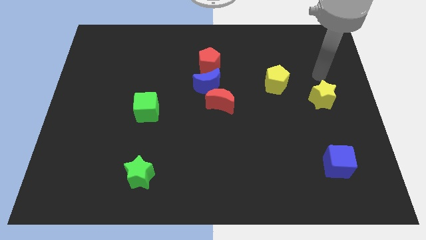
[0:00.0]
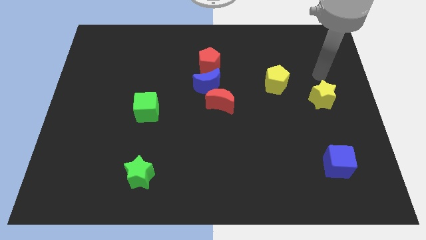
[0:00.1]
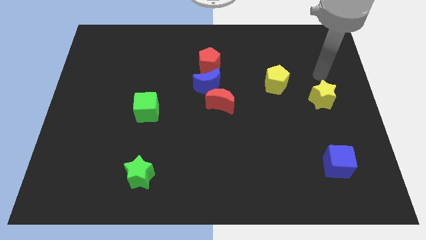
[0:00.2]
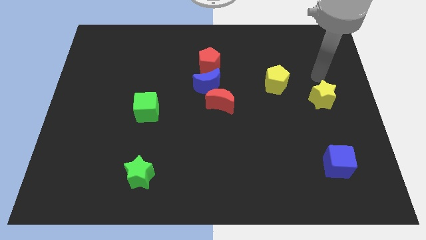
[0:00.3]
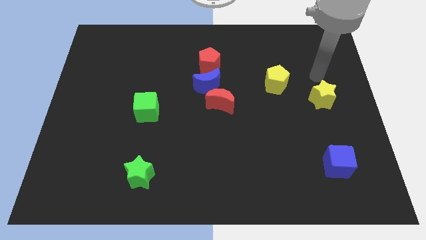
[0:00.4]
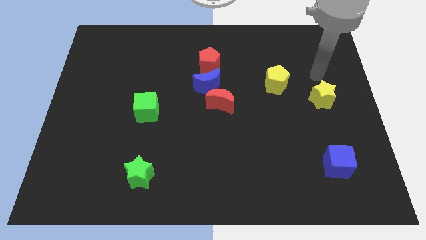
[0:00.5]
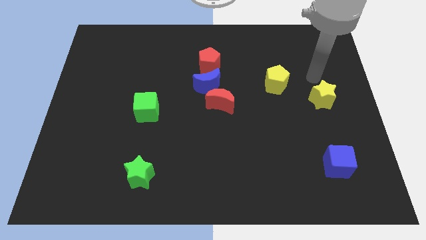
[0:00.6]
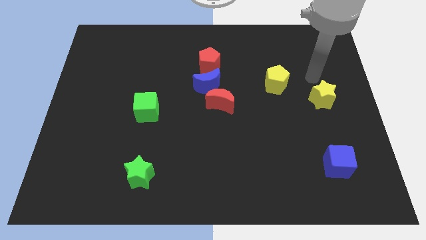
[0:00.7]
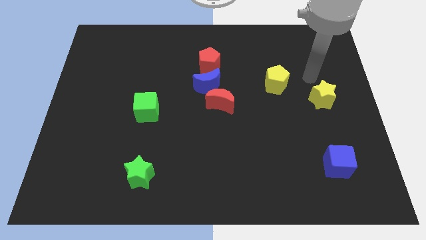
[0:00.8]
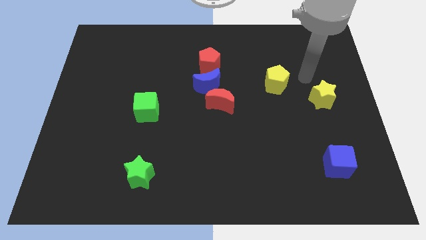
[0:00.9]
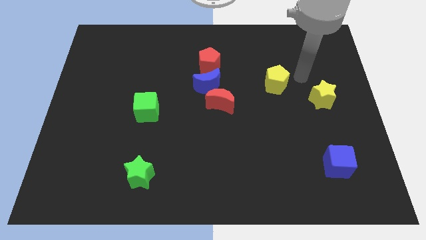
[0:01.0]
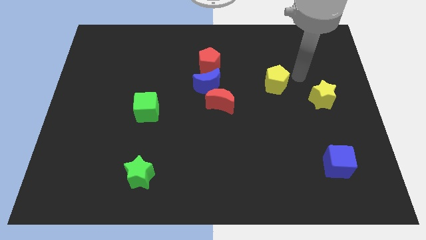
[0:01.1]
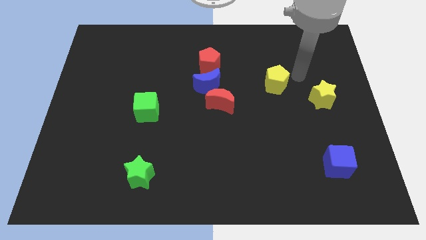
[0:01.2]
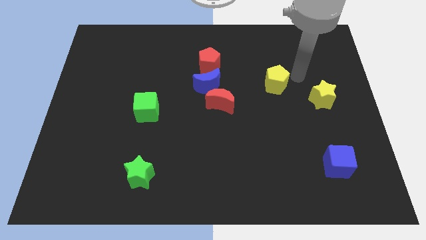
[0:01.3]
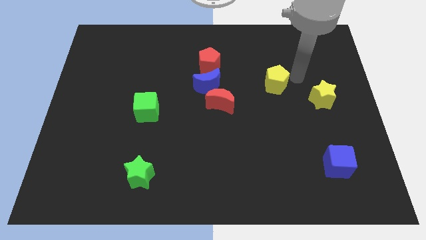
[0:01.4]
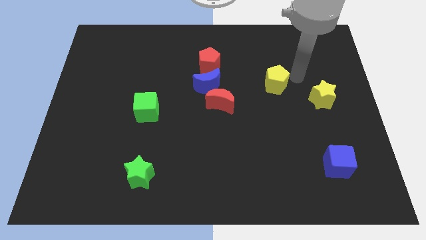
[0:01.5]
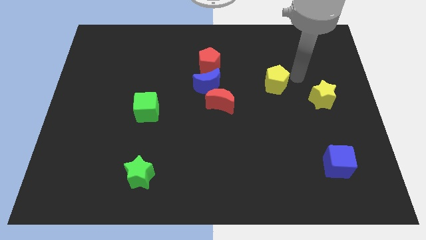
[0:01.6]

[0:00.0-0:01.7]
place your arm at the top left side of yellow star

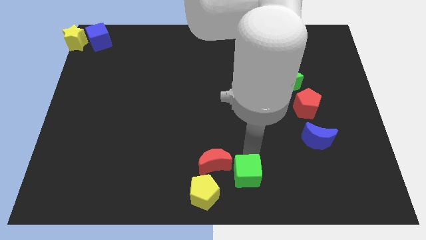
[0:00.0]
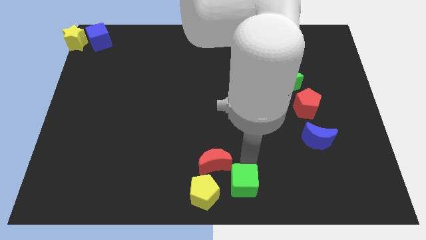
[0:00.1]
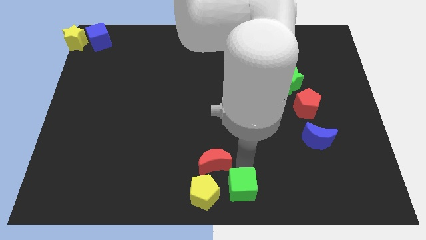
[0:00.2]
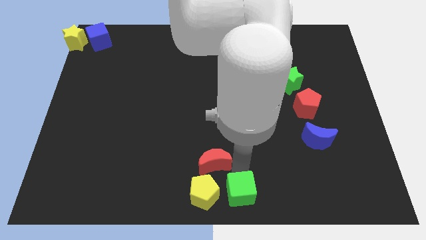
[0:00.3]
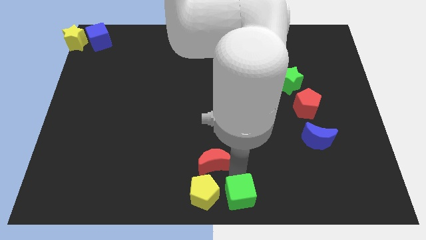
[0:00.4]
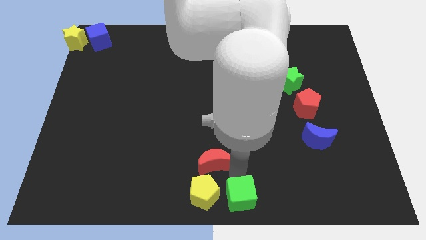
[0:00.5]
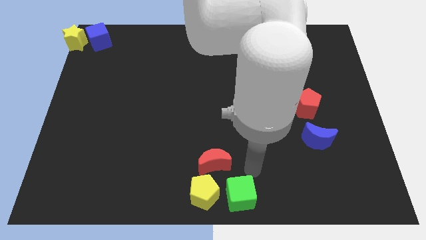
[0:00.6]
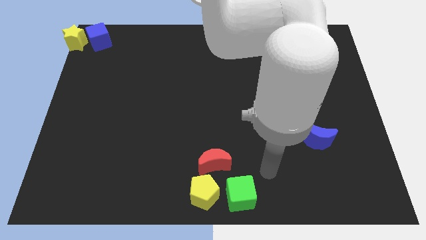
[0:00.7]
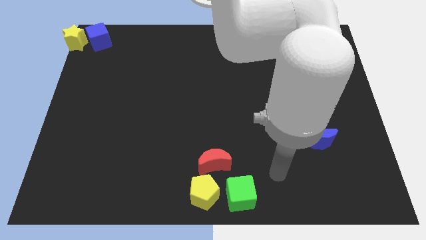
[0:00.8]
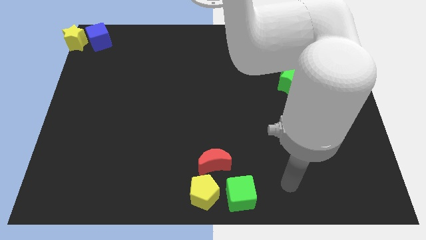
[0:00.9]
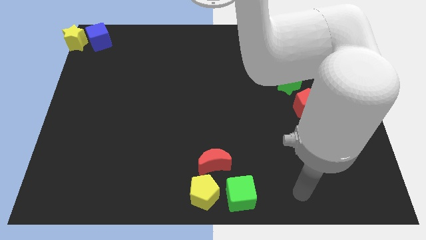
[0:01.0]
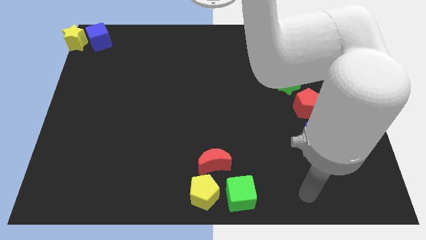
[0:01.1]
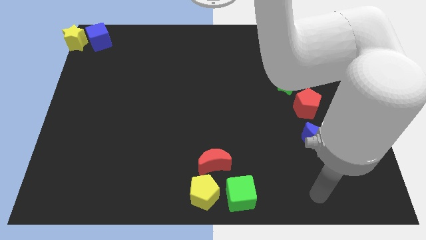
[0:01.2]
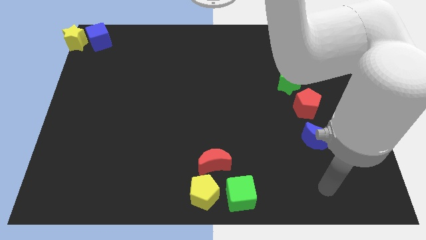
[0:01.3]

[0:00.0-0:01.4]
push the green cube to the right of the yellow pentagon

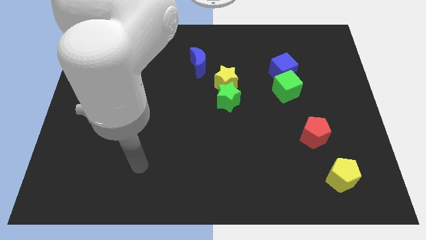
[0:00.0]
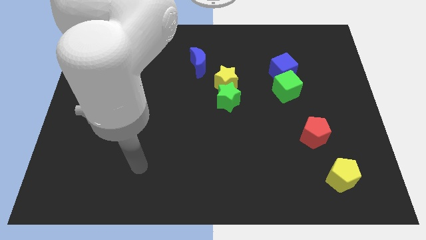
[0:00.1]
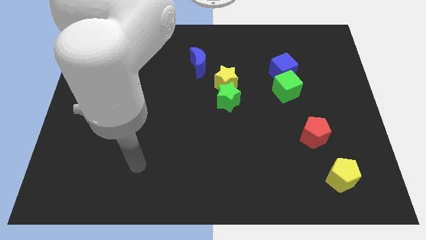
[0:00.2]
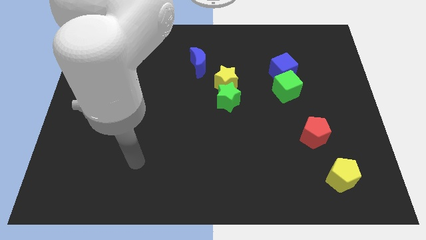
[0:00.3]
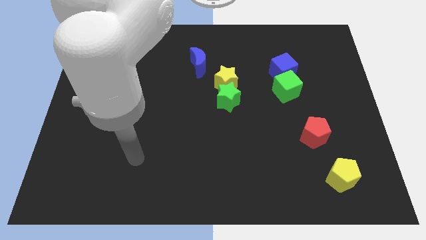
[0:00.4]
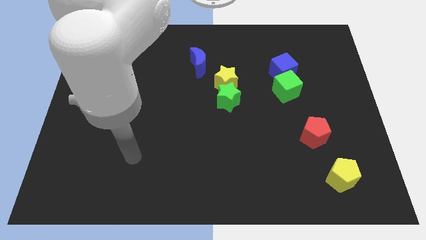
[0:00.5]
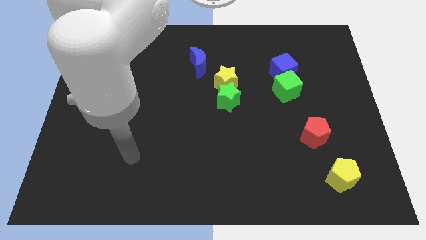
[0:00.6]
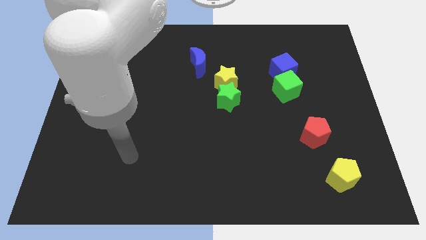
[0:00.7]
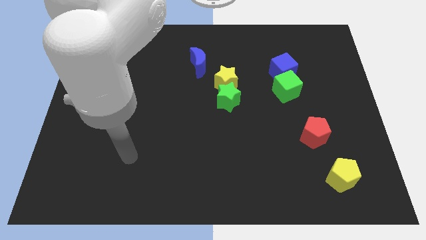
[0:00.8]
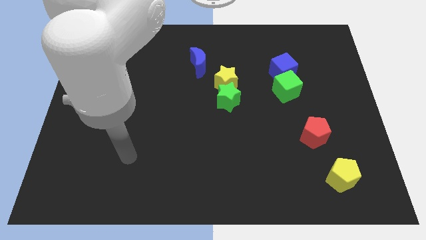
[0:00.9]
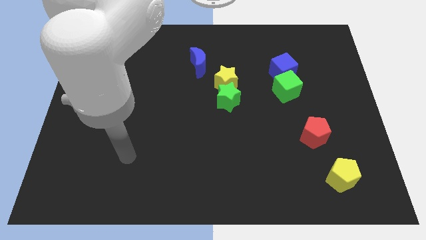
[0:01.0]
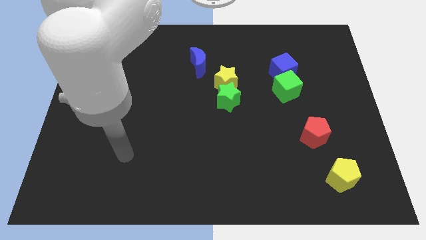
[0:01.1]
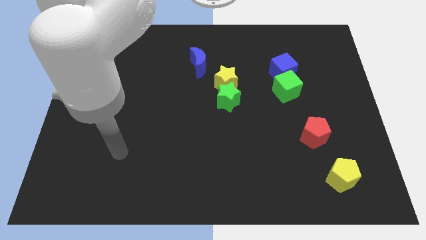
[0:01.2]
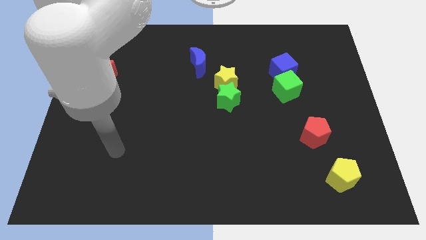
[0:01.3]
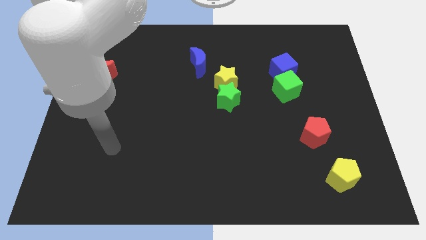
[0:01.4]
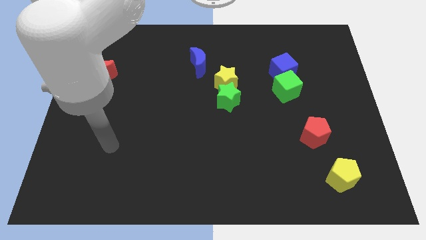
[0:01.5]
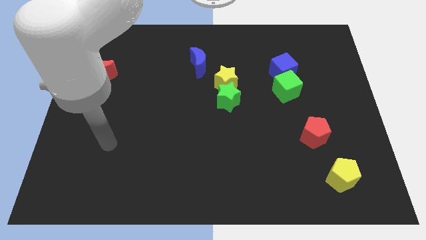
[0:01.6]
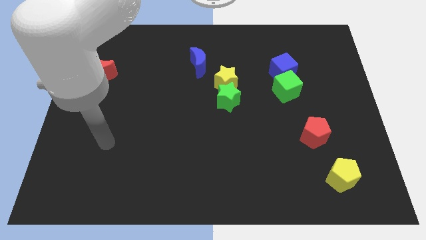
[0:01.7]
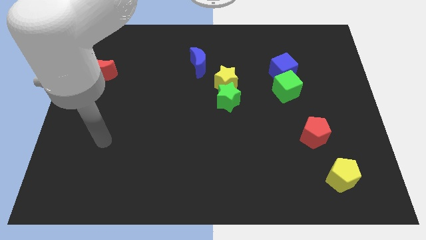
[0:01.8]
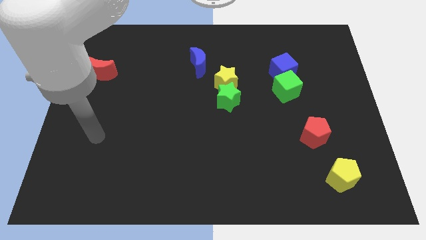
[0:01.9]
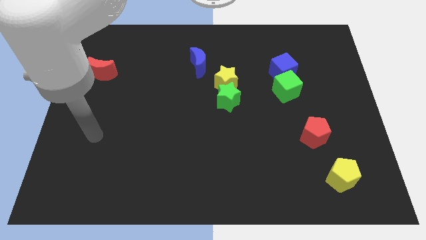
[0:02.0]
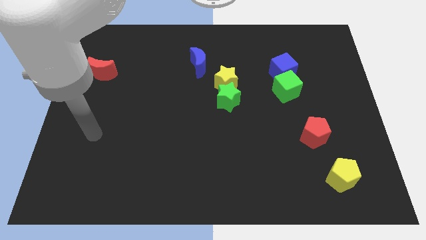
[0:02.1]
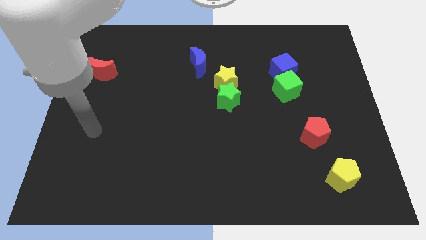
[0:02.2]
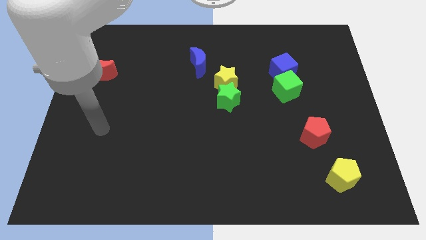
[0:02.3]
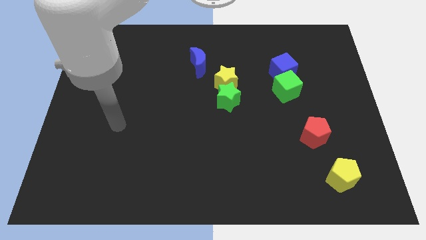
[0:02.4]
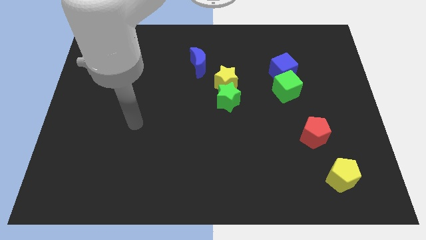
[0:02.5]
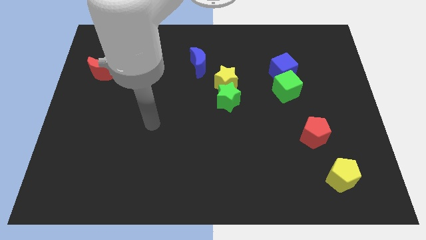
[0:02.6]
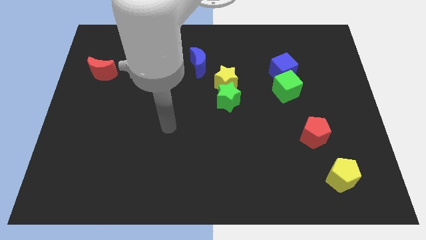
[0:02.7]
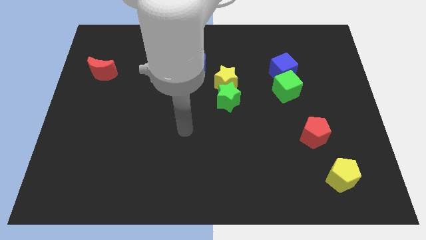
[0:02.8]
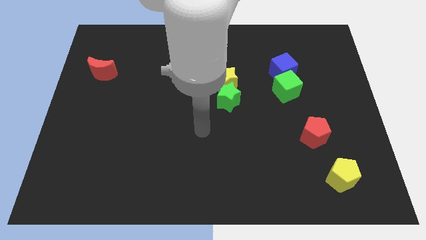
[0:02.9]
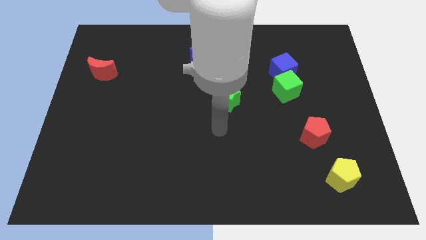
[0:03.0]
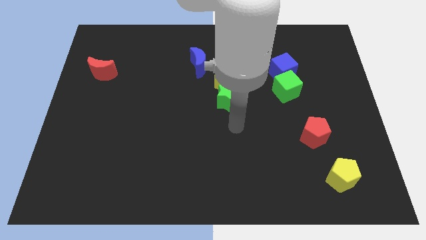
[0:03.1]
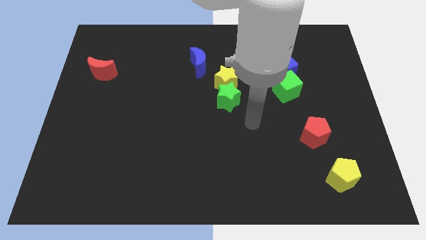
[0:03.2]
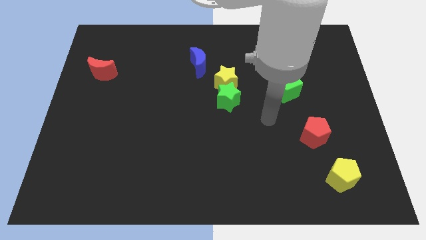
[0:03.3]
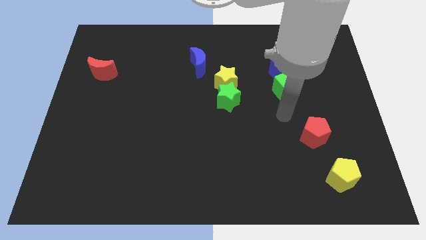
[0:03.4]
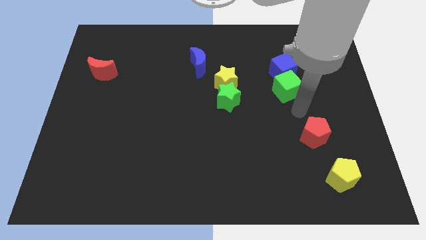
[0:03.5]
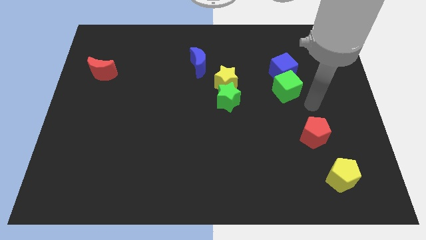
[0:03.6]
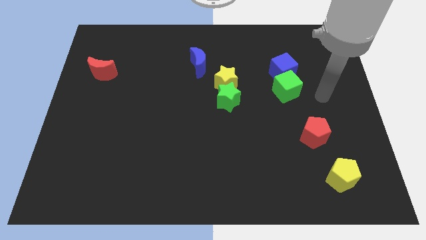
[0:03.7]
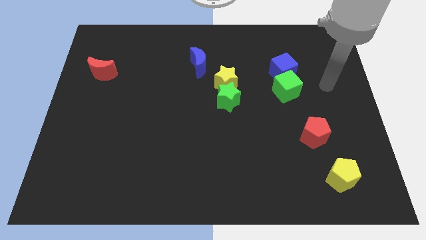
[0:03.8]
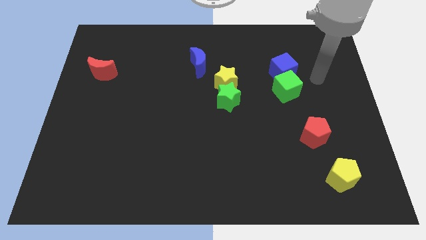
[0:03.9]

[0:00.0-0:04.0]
move the arm close to the green cube

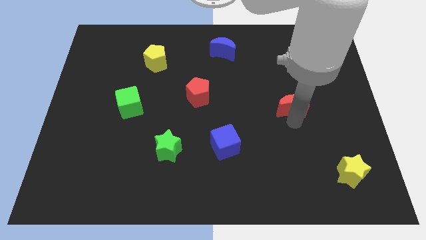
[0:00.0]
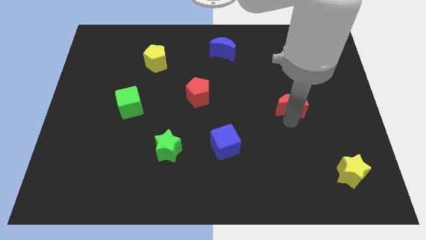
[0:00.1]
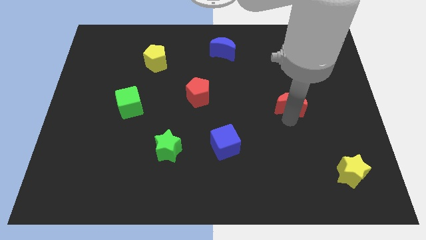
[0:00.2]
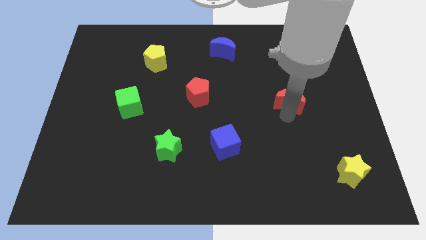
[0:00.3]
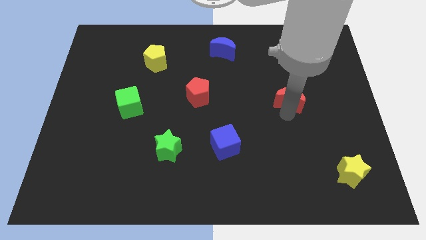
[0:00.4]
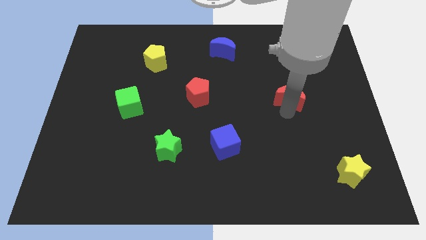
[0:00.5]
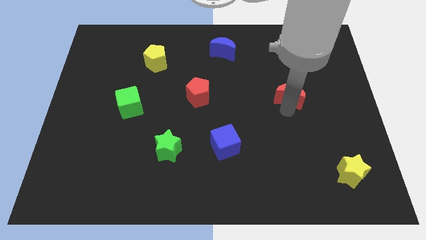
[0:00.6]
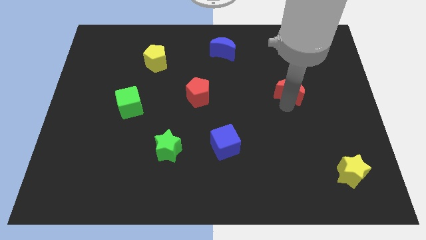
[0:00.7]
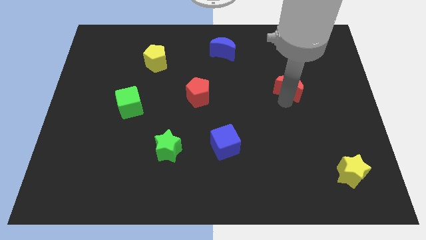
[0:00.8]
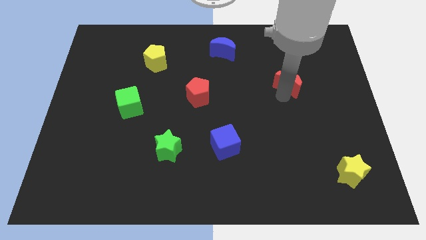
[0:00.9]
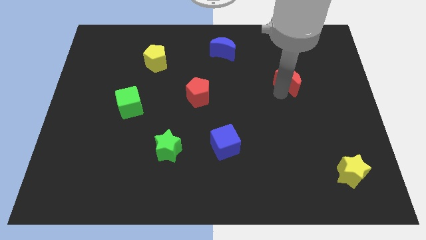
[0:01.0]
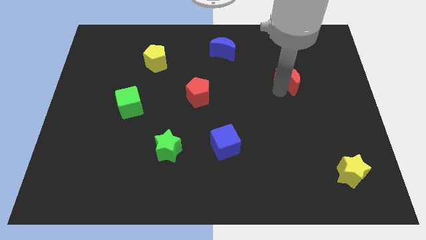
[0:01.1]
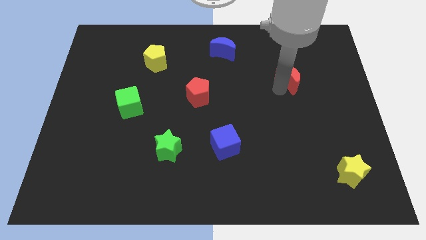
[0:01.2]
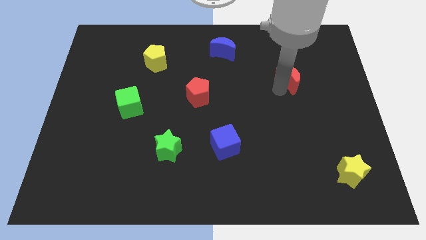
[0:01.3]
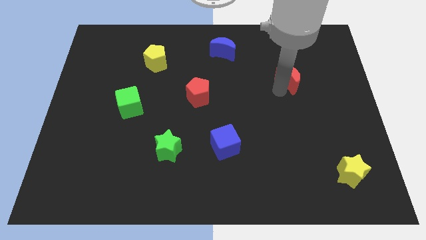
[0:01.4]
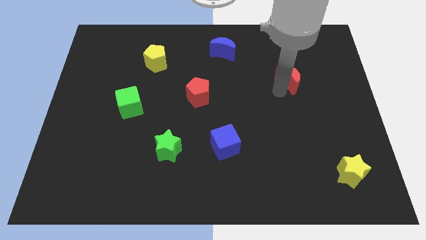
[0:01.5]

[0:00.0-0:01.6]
move the red crescent towards the top right side of the board

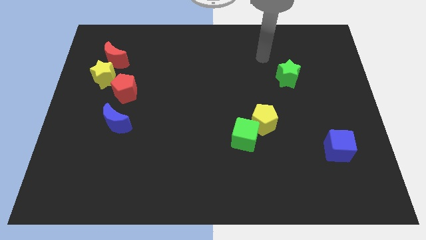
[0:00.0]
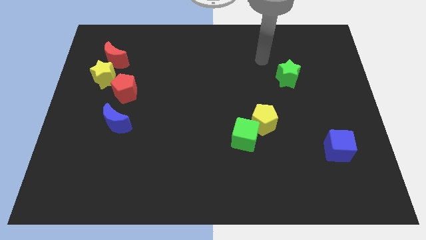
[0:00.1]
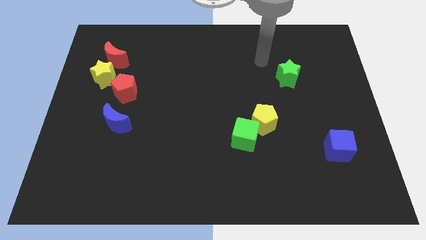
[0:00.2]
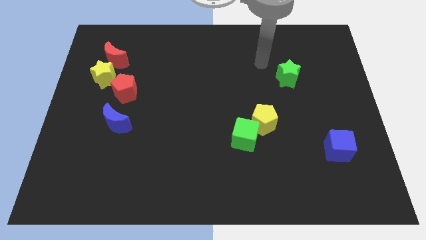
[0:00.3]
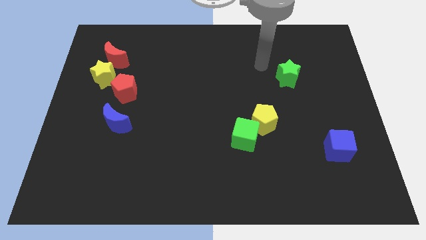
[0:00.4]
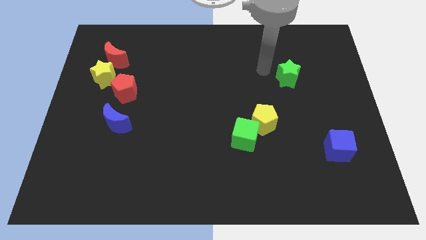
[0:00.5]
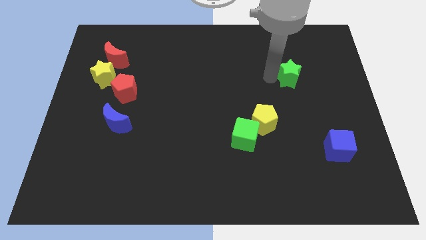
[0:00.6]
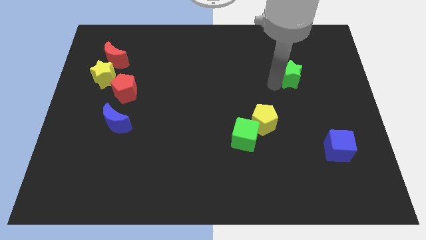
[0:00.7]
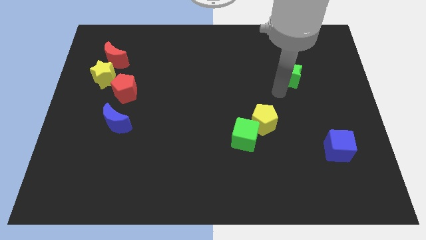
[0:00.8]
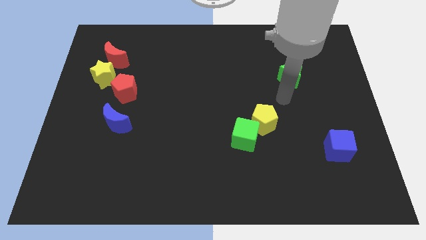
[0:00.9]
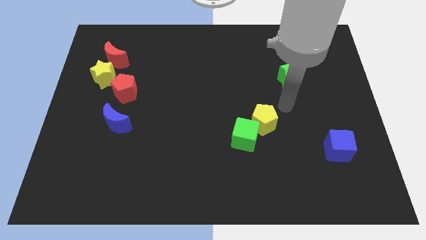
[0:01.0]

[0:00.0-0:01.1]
touch the green star
